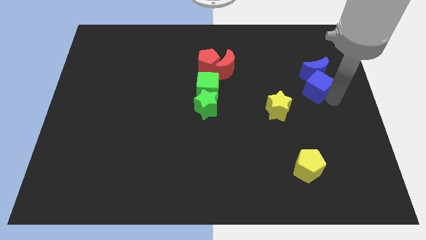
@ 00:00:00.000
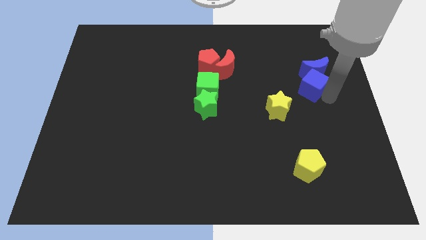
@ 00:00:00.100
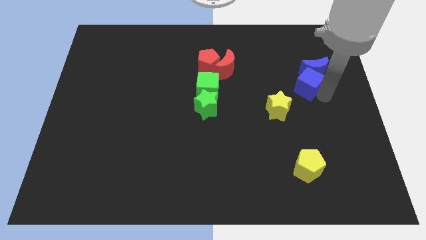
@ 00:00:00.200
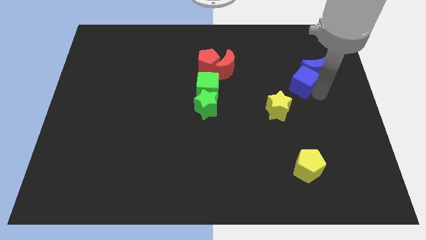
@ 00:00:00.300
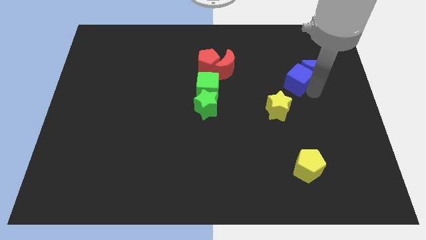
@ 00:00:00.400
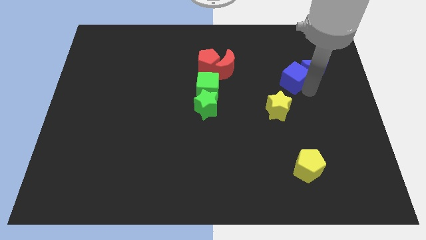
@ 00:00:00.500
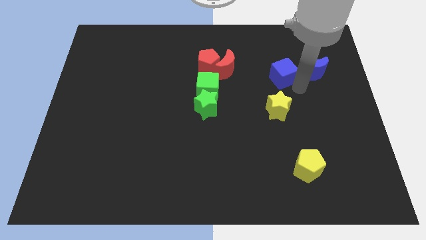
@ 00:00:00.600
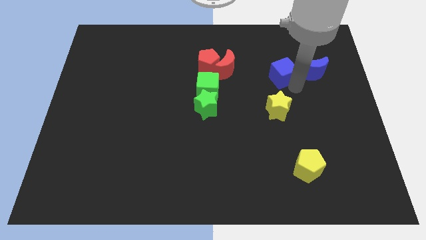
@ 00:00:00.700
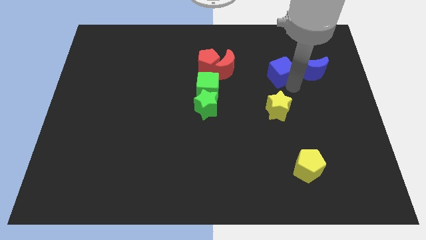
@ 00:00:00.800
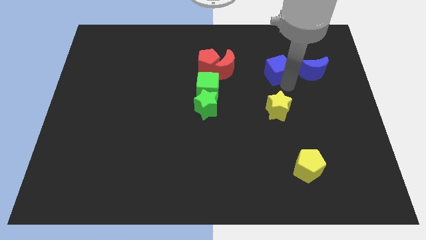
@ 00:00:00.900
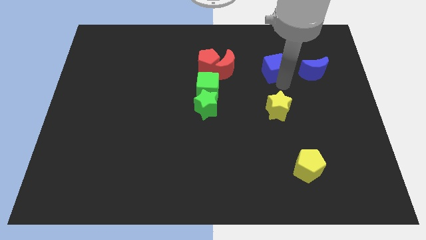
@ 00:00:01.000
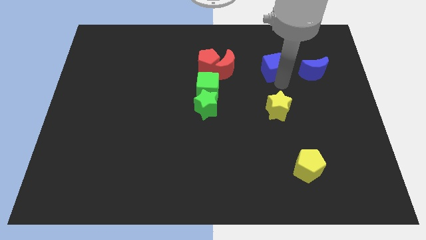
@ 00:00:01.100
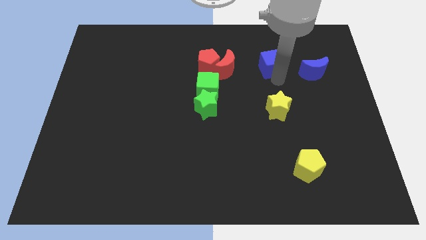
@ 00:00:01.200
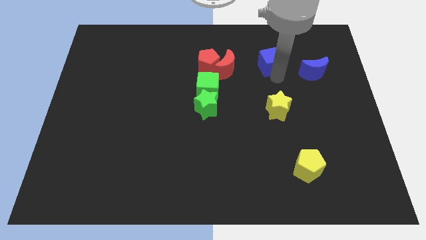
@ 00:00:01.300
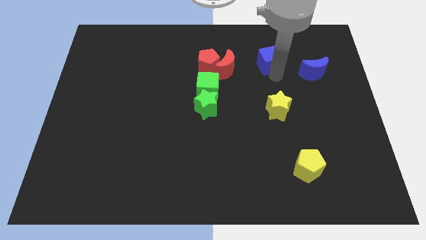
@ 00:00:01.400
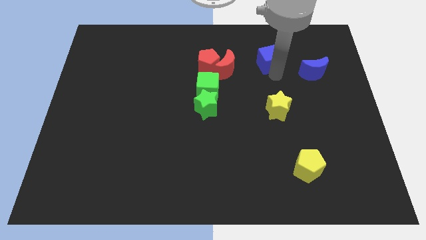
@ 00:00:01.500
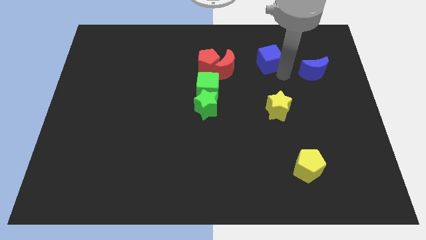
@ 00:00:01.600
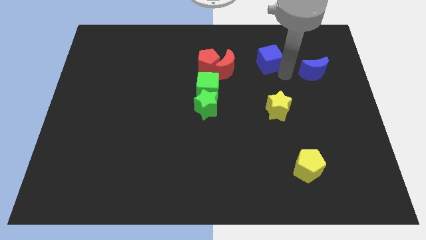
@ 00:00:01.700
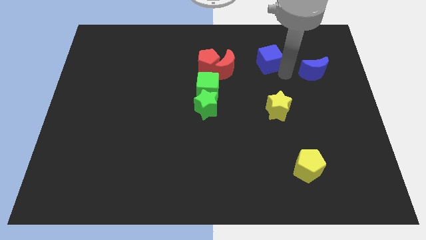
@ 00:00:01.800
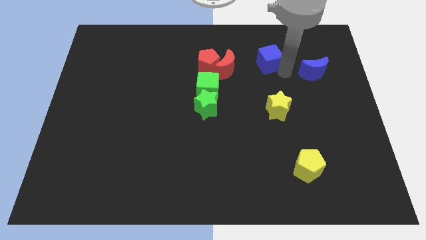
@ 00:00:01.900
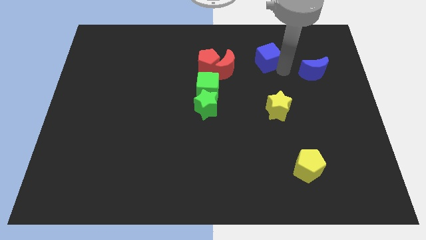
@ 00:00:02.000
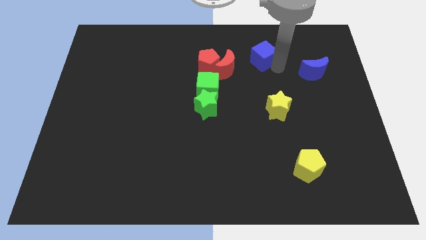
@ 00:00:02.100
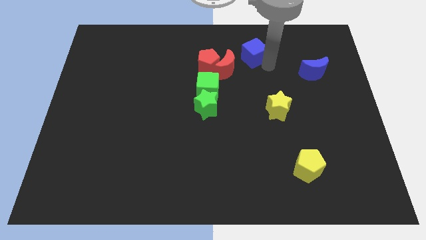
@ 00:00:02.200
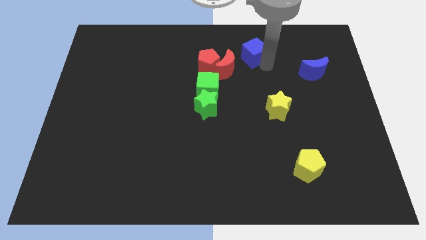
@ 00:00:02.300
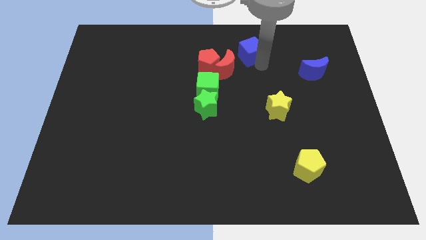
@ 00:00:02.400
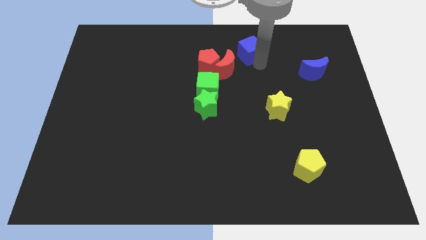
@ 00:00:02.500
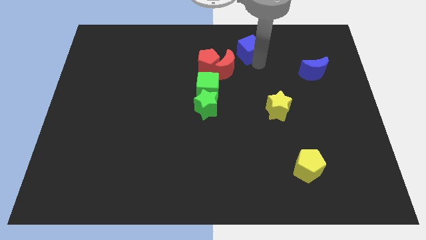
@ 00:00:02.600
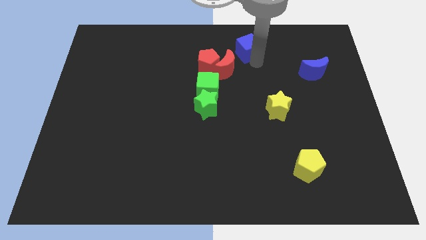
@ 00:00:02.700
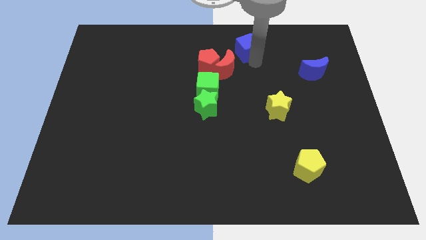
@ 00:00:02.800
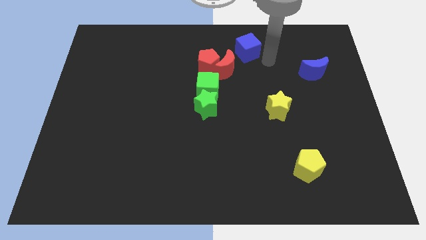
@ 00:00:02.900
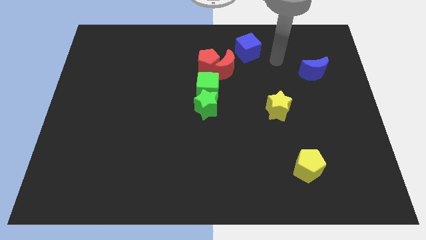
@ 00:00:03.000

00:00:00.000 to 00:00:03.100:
move the blue cube away from the blue crescent

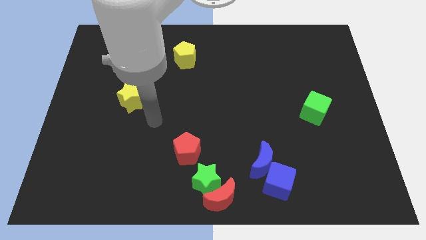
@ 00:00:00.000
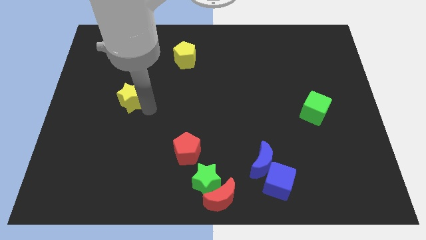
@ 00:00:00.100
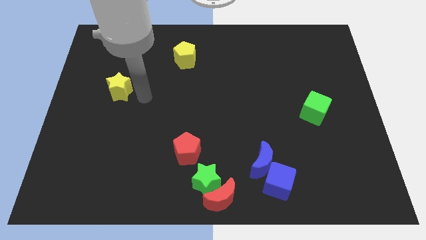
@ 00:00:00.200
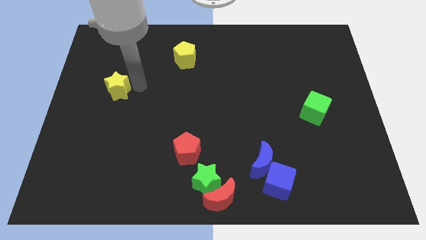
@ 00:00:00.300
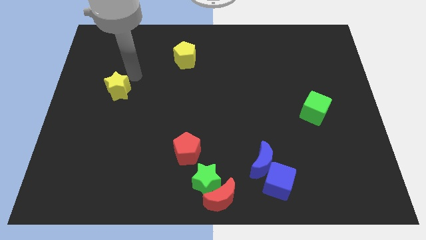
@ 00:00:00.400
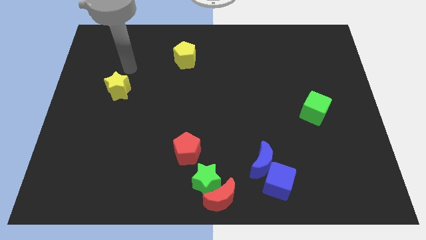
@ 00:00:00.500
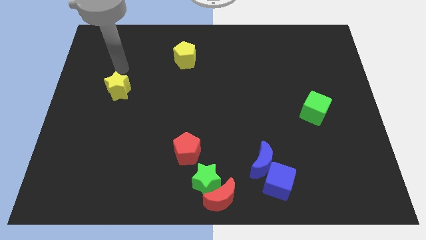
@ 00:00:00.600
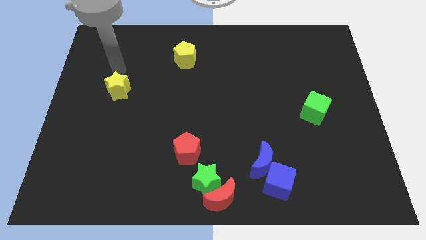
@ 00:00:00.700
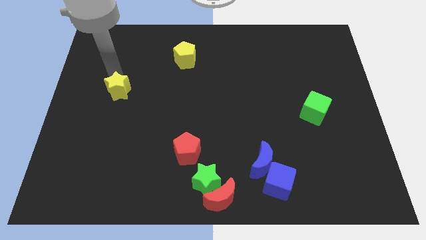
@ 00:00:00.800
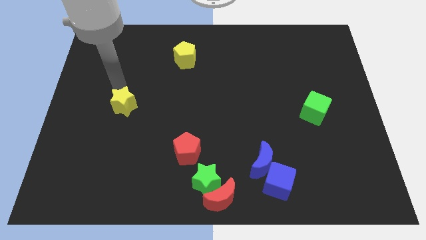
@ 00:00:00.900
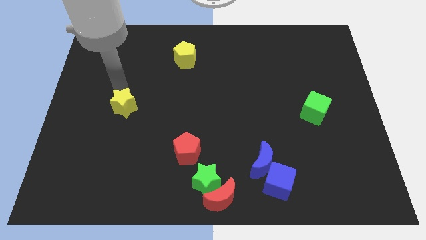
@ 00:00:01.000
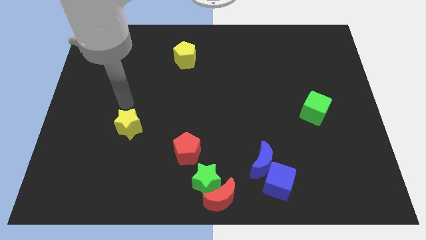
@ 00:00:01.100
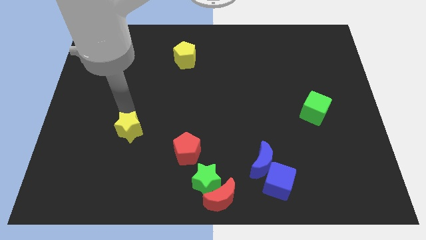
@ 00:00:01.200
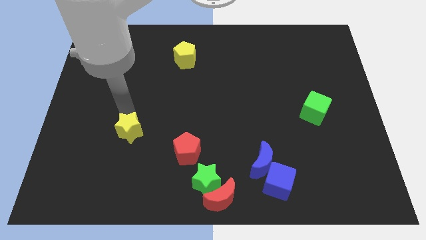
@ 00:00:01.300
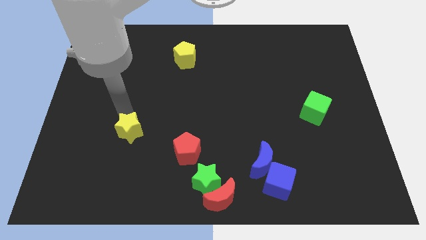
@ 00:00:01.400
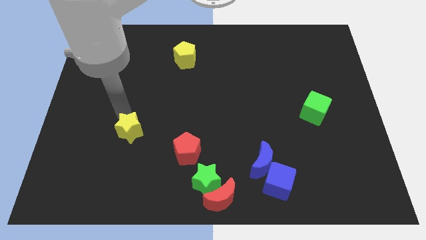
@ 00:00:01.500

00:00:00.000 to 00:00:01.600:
slide the yellow star towards the bottom of the board

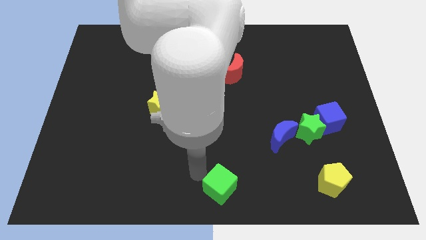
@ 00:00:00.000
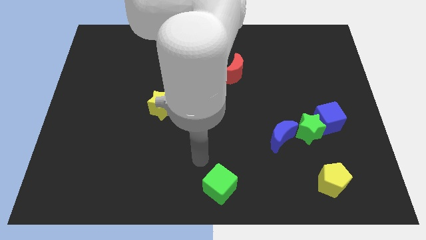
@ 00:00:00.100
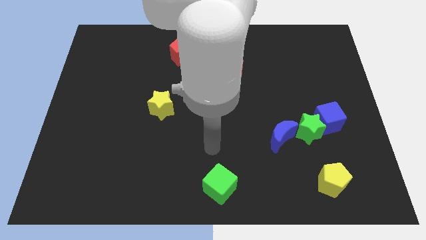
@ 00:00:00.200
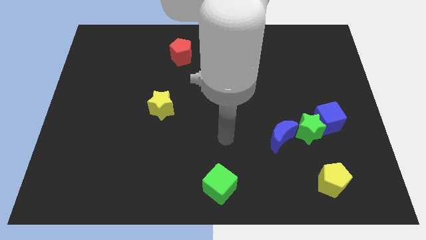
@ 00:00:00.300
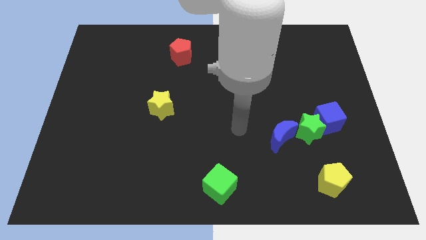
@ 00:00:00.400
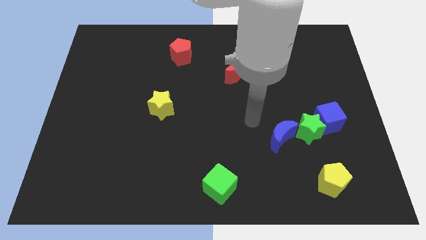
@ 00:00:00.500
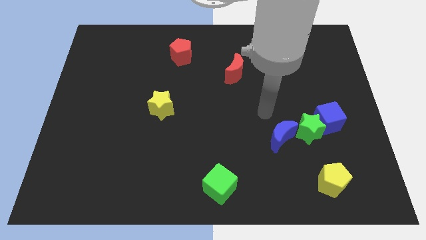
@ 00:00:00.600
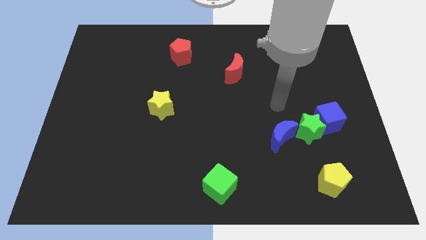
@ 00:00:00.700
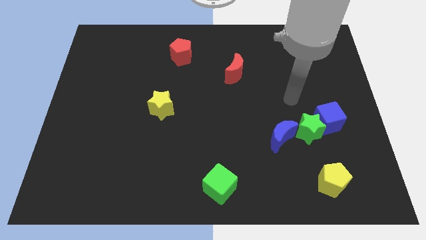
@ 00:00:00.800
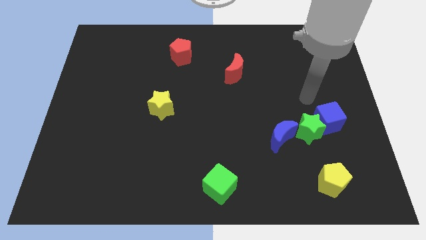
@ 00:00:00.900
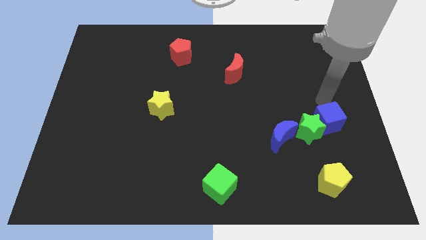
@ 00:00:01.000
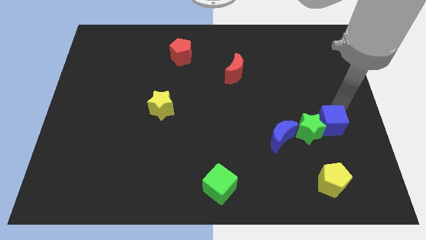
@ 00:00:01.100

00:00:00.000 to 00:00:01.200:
move your arm to the top of blue cube

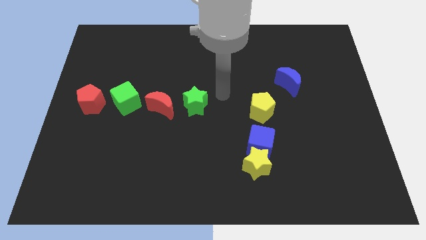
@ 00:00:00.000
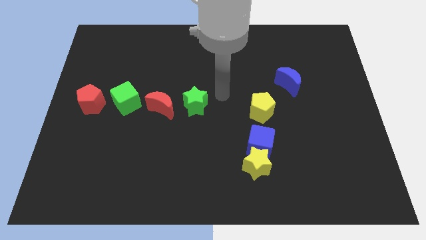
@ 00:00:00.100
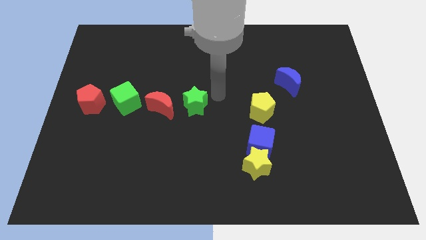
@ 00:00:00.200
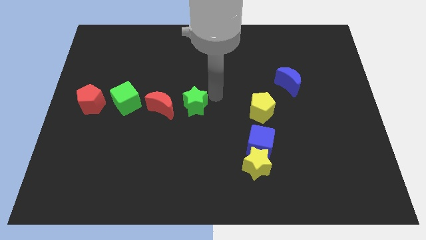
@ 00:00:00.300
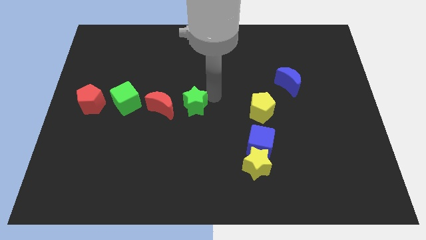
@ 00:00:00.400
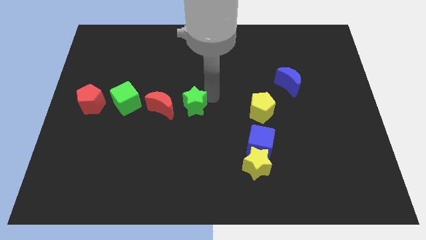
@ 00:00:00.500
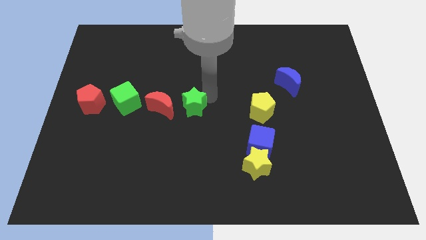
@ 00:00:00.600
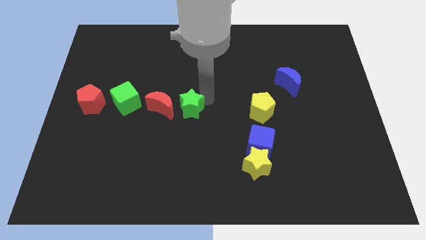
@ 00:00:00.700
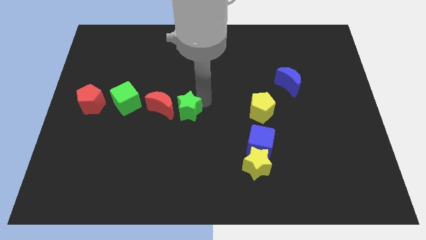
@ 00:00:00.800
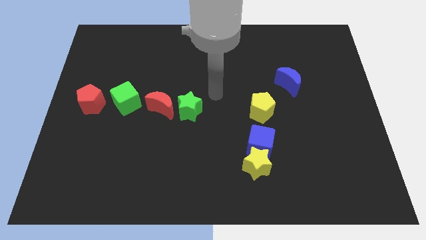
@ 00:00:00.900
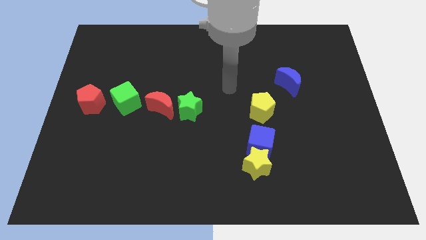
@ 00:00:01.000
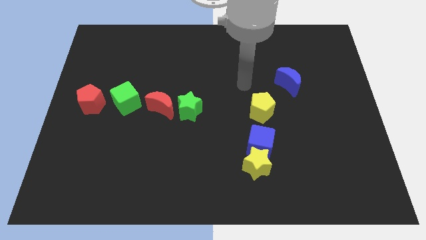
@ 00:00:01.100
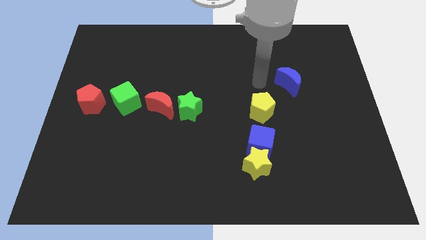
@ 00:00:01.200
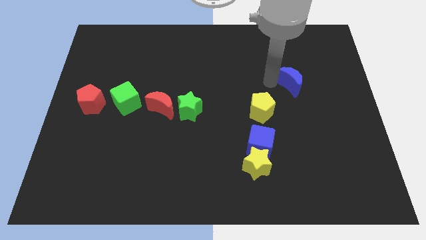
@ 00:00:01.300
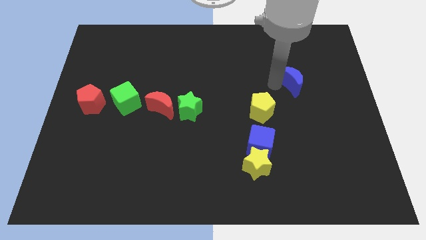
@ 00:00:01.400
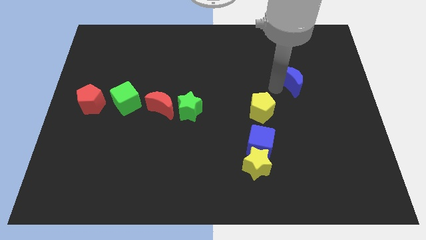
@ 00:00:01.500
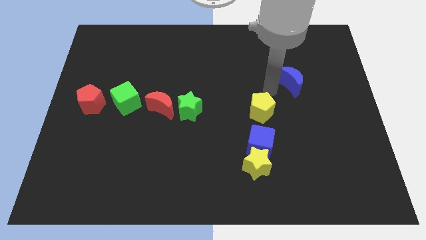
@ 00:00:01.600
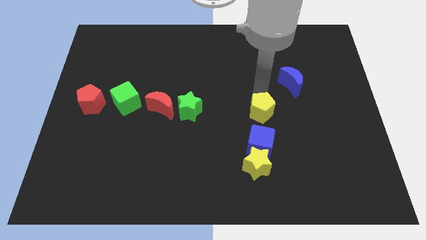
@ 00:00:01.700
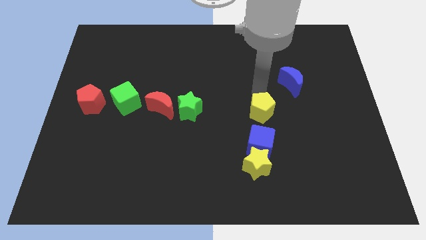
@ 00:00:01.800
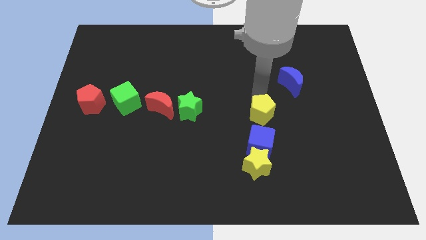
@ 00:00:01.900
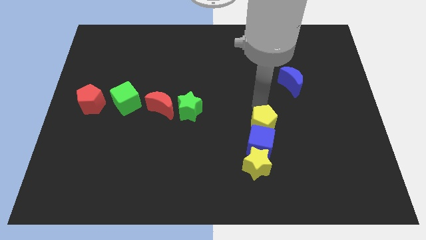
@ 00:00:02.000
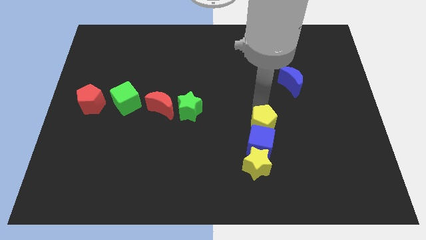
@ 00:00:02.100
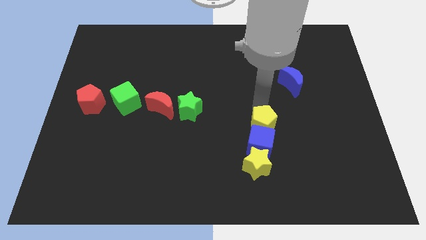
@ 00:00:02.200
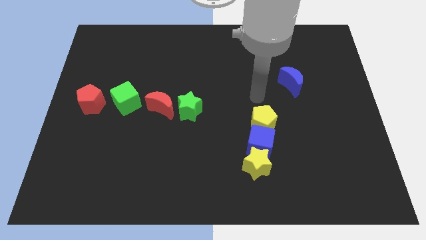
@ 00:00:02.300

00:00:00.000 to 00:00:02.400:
push the yellow pentagon towards the blue cube

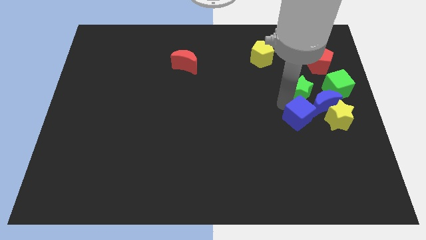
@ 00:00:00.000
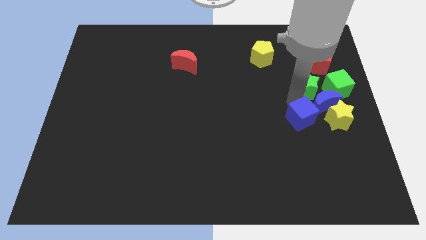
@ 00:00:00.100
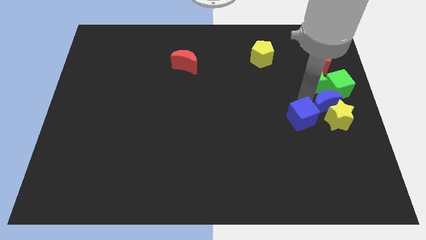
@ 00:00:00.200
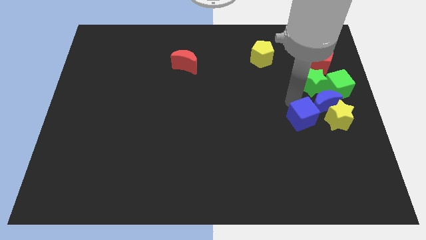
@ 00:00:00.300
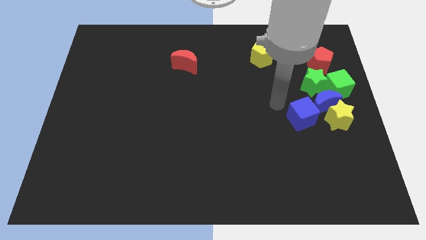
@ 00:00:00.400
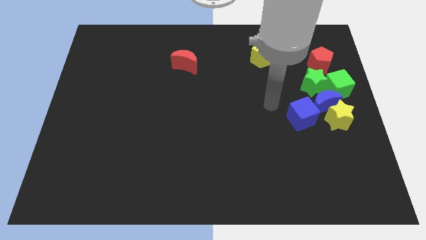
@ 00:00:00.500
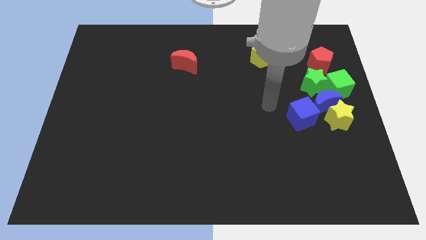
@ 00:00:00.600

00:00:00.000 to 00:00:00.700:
push the green star into green cube
